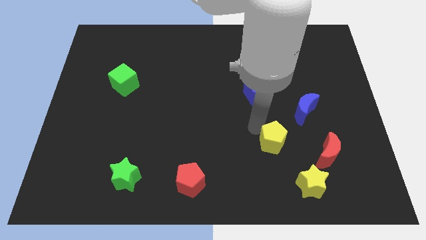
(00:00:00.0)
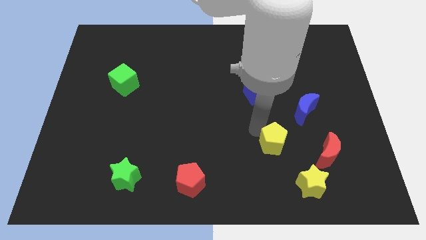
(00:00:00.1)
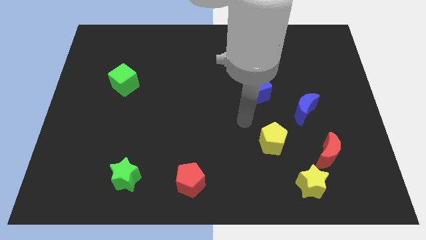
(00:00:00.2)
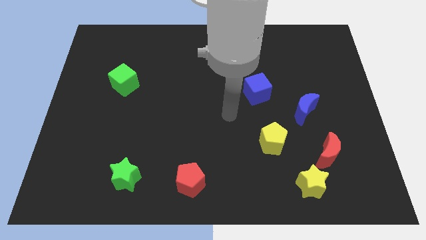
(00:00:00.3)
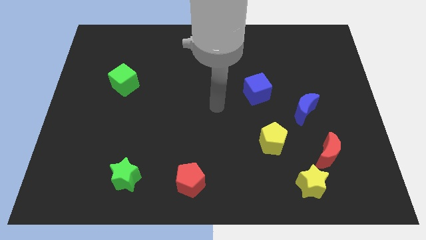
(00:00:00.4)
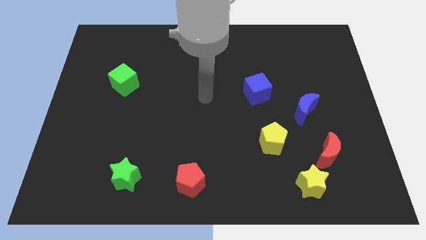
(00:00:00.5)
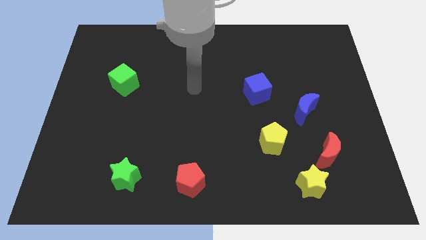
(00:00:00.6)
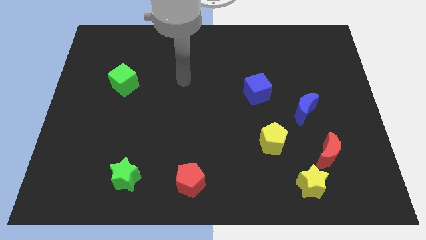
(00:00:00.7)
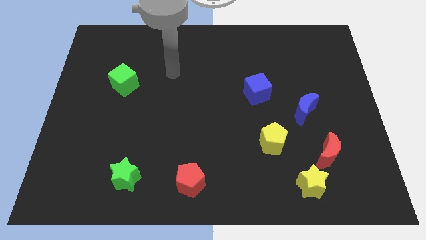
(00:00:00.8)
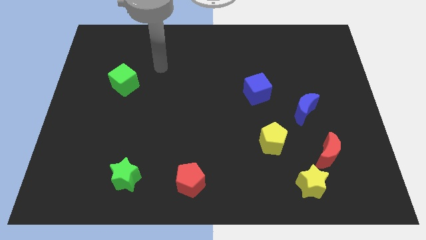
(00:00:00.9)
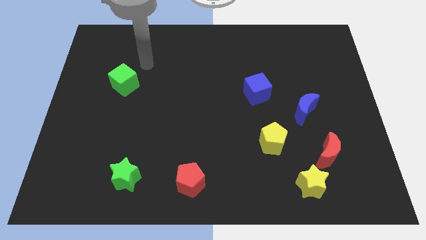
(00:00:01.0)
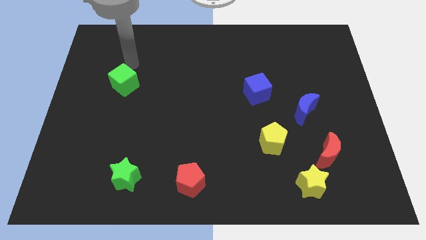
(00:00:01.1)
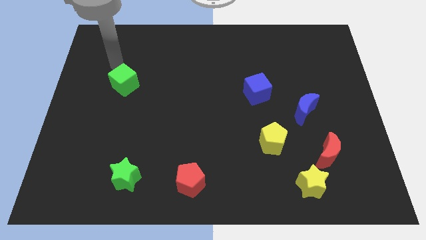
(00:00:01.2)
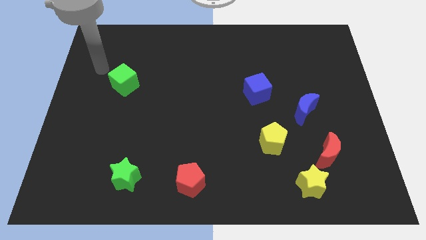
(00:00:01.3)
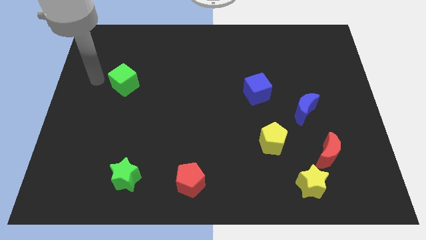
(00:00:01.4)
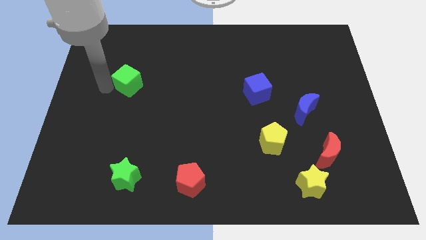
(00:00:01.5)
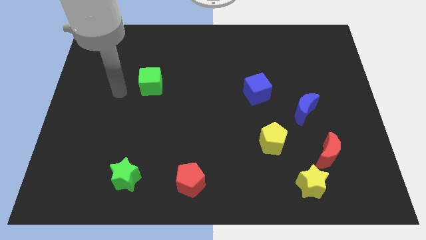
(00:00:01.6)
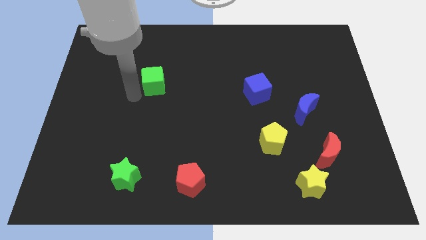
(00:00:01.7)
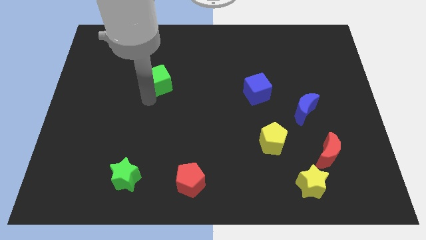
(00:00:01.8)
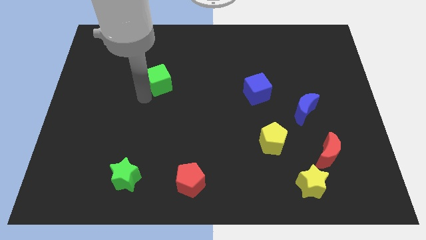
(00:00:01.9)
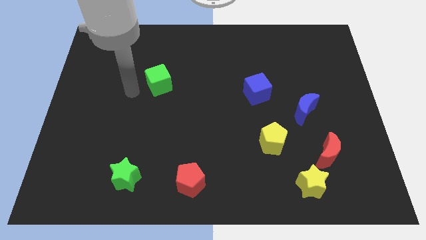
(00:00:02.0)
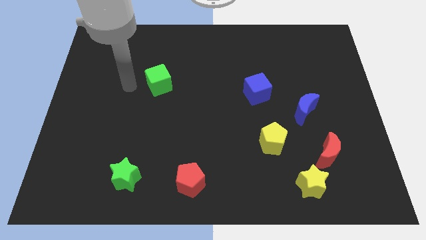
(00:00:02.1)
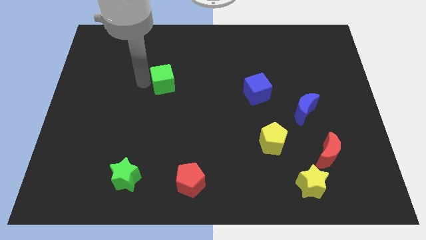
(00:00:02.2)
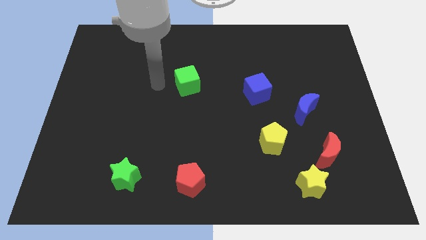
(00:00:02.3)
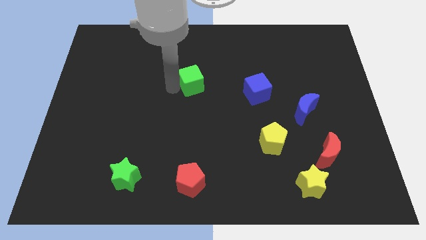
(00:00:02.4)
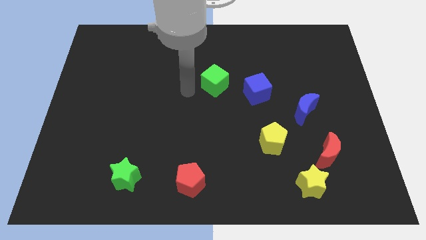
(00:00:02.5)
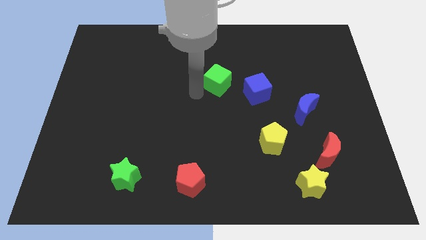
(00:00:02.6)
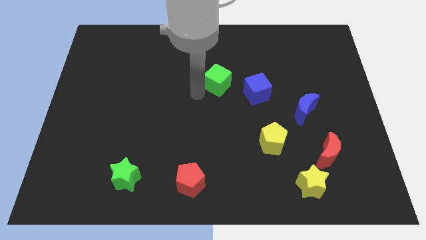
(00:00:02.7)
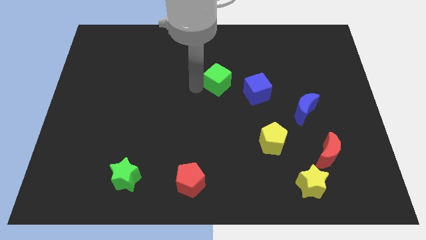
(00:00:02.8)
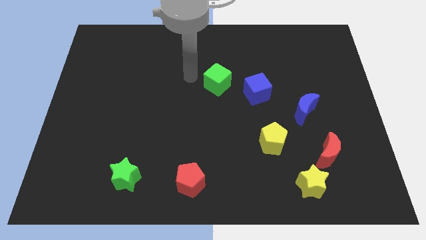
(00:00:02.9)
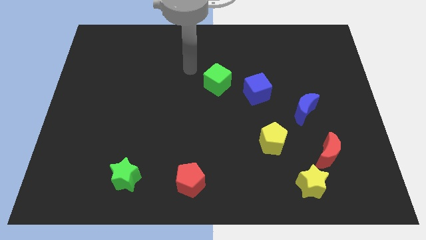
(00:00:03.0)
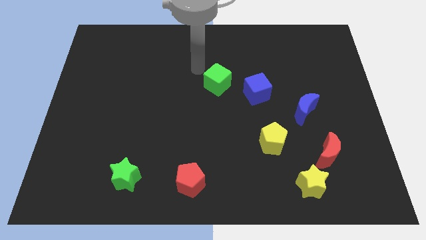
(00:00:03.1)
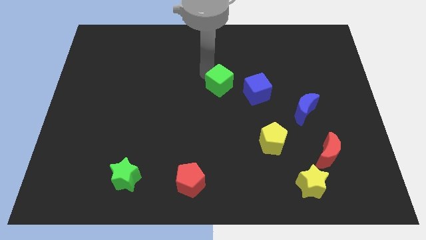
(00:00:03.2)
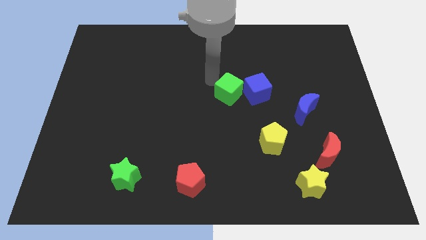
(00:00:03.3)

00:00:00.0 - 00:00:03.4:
push the green cube into the blue cube

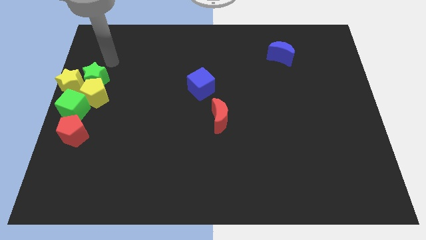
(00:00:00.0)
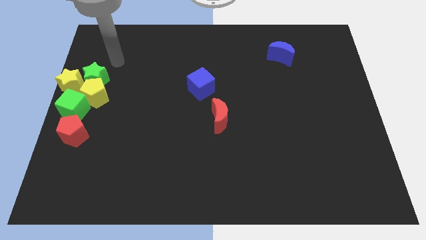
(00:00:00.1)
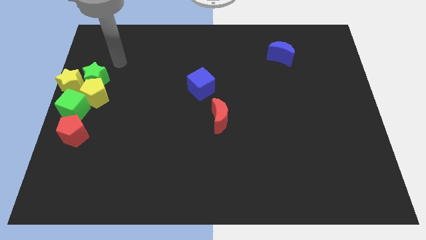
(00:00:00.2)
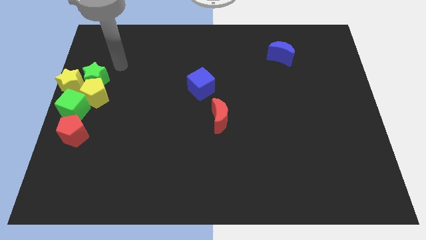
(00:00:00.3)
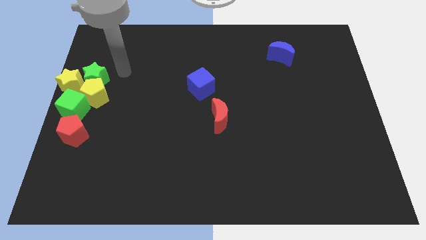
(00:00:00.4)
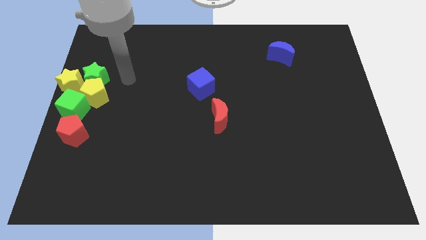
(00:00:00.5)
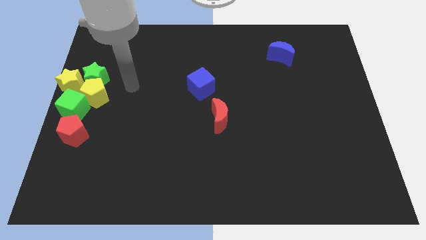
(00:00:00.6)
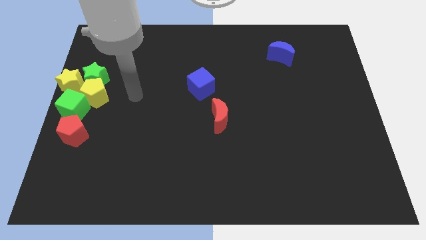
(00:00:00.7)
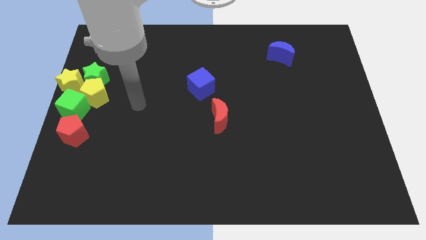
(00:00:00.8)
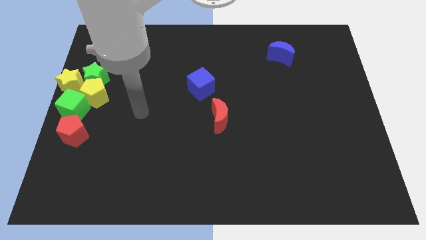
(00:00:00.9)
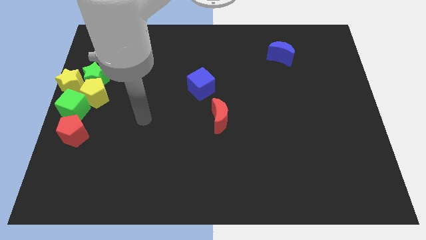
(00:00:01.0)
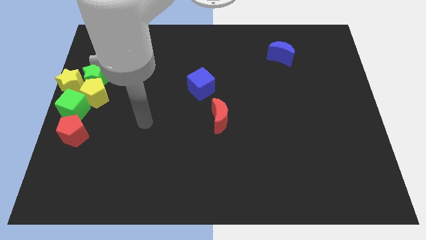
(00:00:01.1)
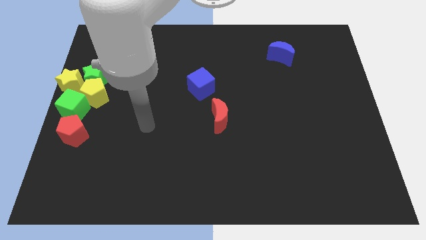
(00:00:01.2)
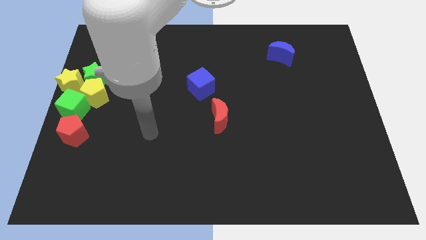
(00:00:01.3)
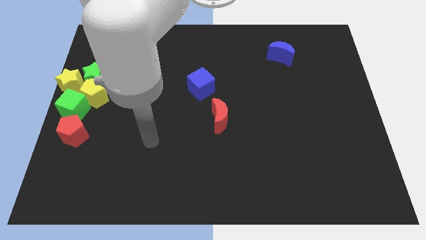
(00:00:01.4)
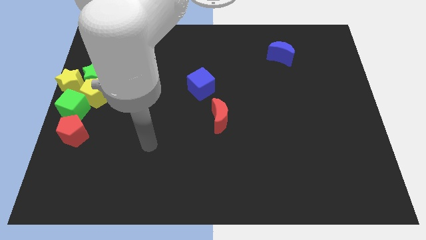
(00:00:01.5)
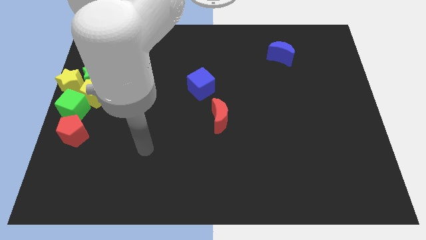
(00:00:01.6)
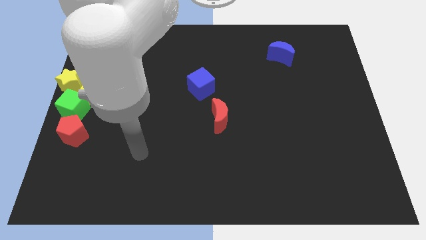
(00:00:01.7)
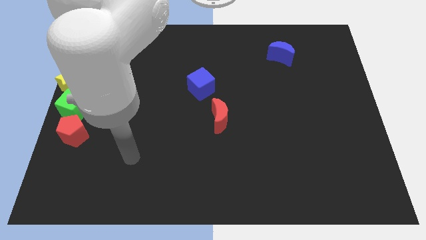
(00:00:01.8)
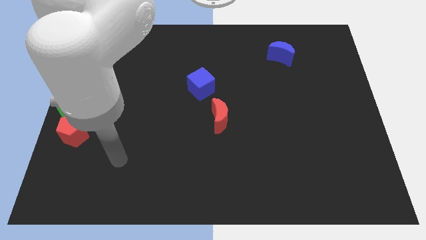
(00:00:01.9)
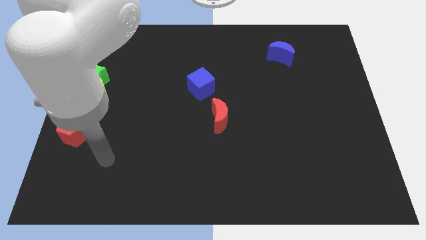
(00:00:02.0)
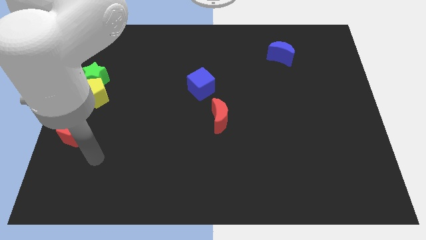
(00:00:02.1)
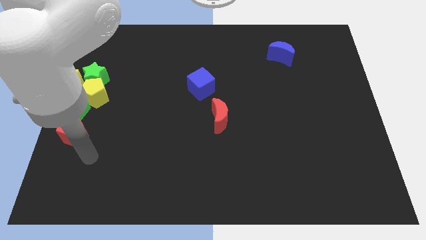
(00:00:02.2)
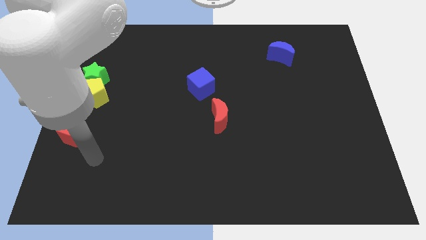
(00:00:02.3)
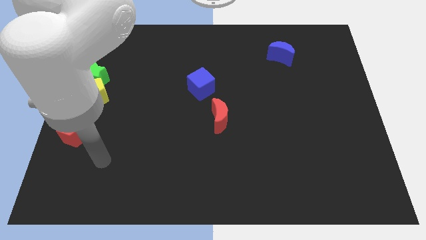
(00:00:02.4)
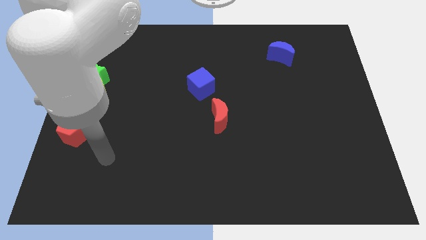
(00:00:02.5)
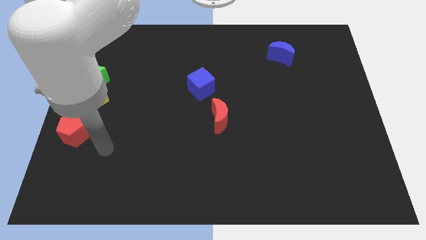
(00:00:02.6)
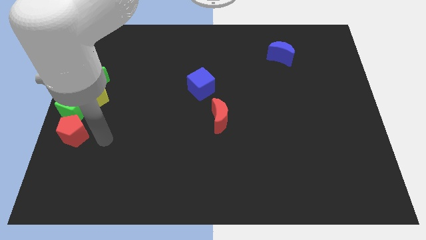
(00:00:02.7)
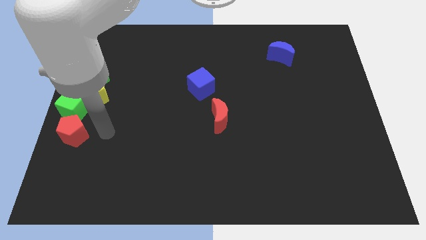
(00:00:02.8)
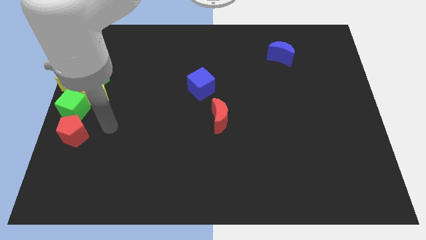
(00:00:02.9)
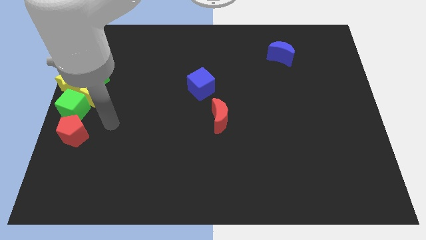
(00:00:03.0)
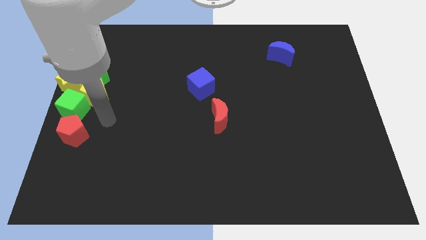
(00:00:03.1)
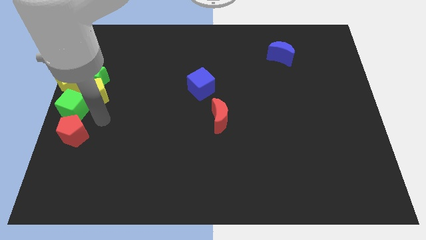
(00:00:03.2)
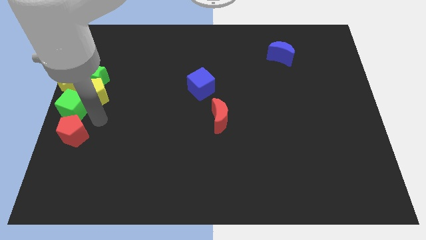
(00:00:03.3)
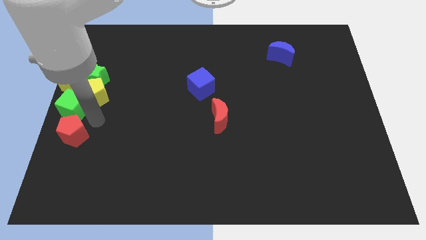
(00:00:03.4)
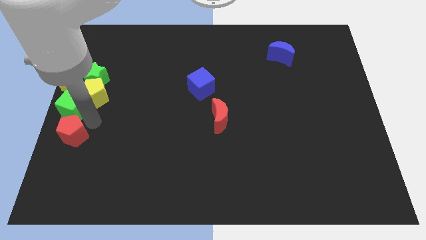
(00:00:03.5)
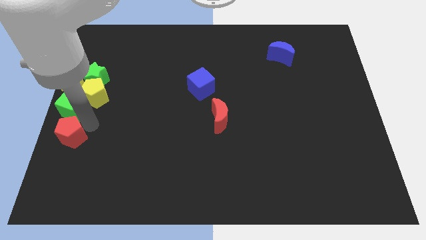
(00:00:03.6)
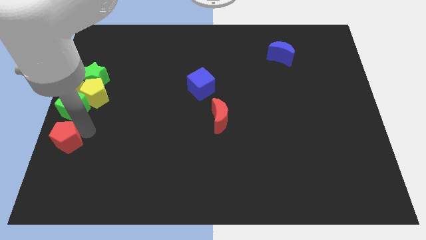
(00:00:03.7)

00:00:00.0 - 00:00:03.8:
move arm near red pentagon

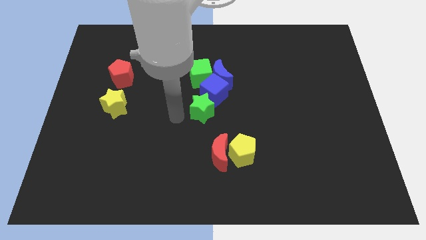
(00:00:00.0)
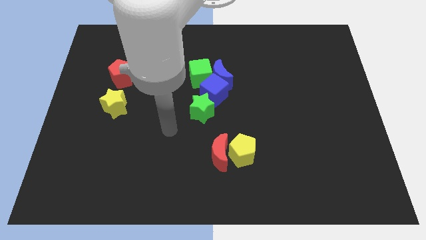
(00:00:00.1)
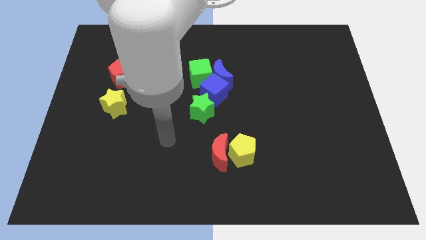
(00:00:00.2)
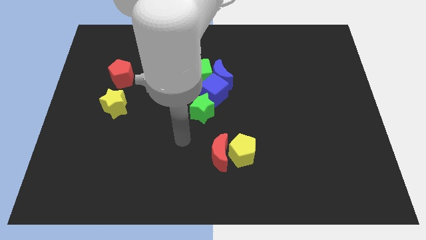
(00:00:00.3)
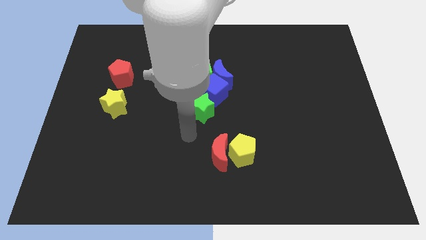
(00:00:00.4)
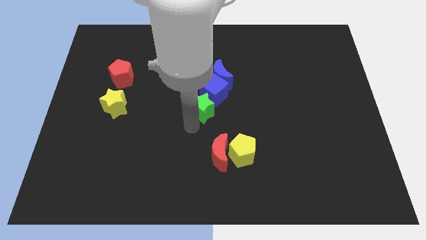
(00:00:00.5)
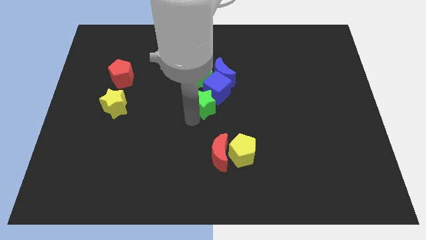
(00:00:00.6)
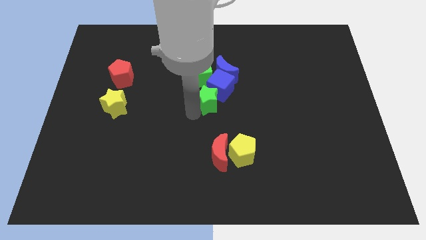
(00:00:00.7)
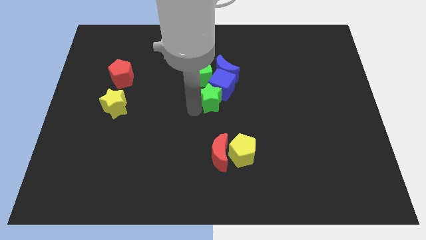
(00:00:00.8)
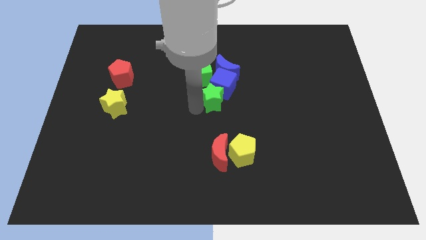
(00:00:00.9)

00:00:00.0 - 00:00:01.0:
push the green star into the blue cube

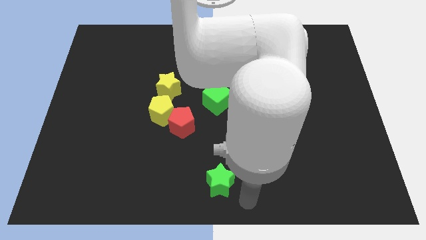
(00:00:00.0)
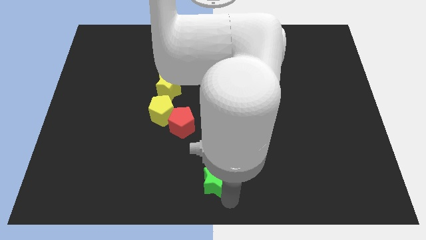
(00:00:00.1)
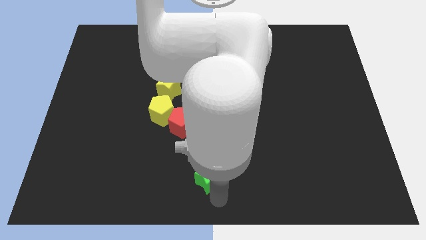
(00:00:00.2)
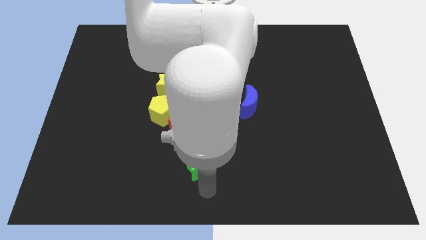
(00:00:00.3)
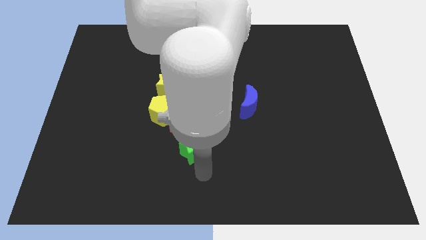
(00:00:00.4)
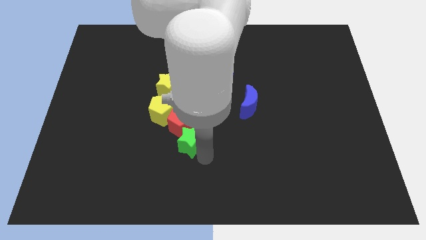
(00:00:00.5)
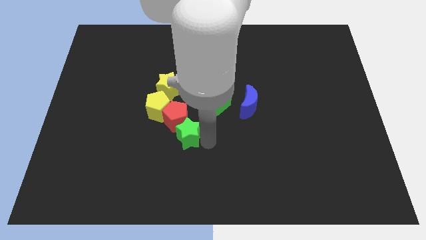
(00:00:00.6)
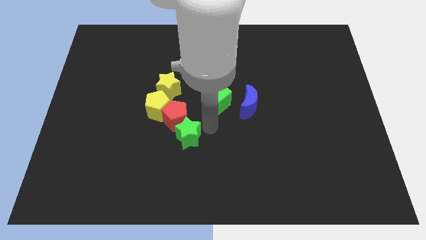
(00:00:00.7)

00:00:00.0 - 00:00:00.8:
move the green star close to the red pentagon
